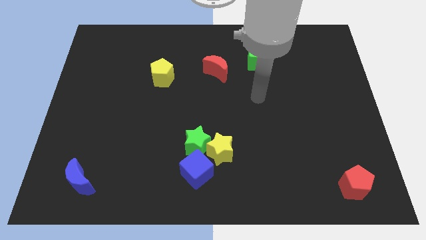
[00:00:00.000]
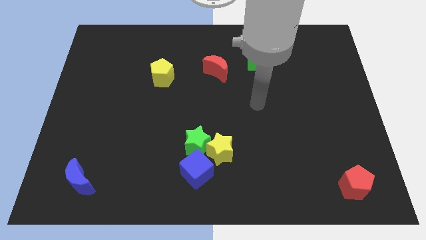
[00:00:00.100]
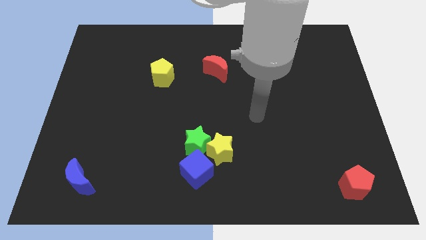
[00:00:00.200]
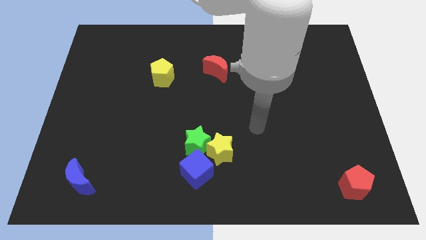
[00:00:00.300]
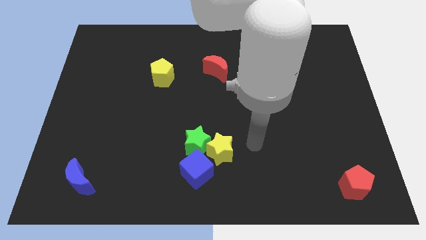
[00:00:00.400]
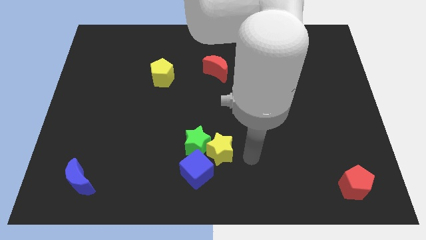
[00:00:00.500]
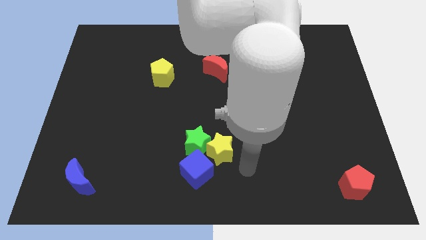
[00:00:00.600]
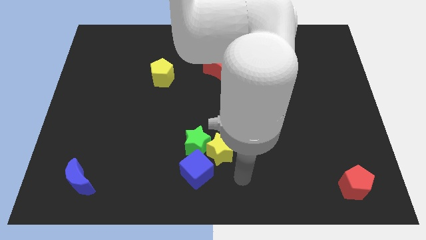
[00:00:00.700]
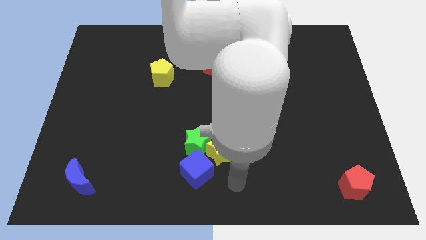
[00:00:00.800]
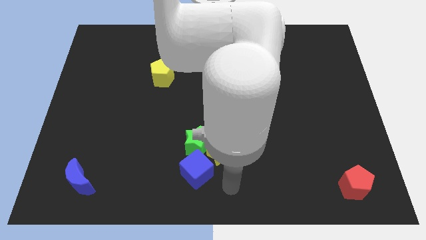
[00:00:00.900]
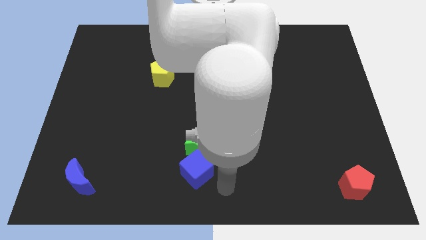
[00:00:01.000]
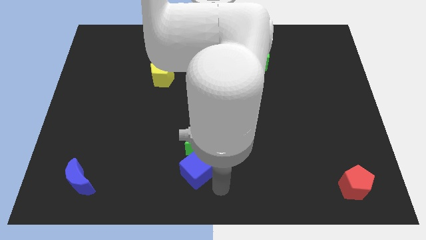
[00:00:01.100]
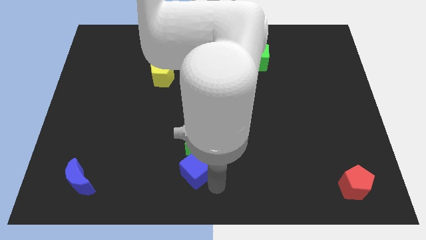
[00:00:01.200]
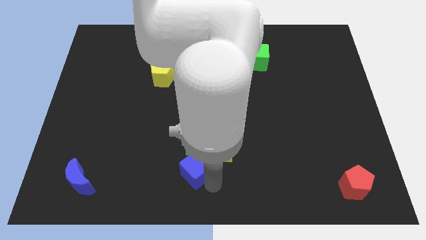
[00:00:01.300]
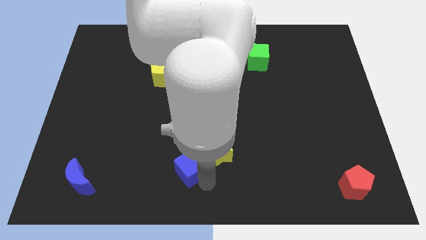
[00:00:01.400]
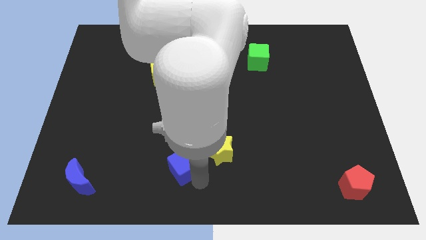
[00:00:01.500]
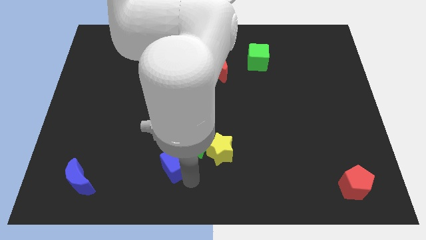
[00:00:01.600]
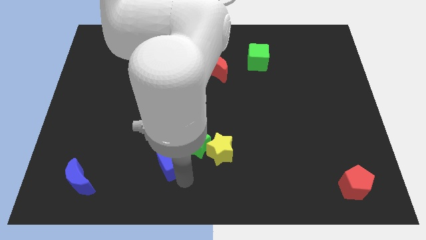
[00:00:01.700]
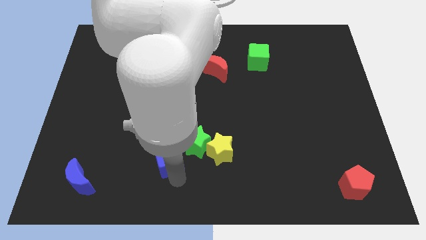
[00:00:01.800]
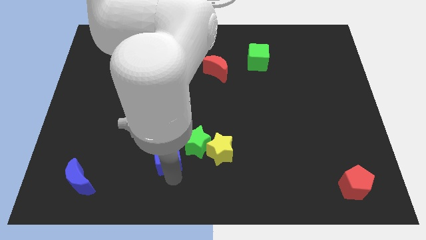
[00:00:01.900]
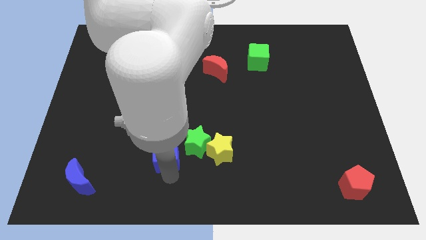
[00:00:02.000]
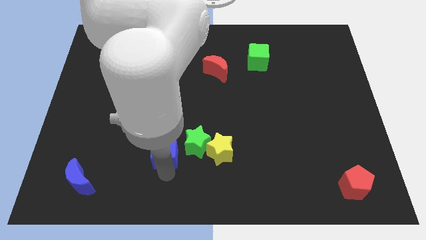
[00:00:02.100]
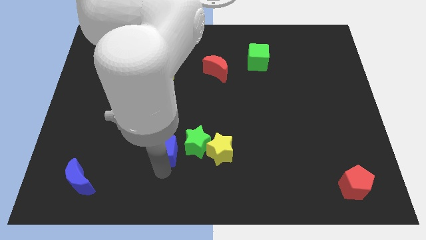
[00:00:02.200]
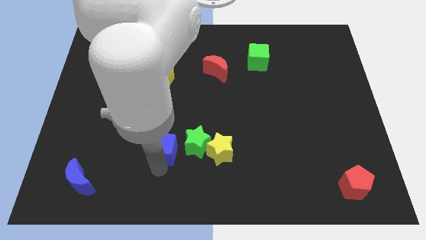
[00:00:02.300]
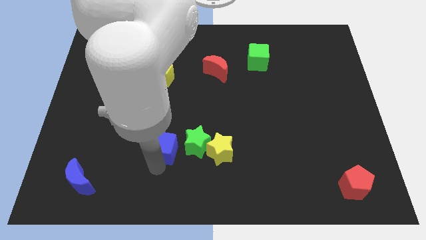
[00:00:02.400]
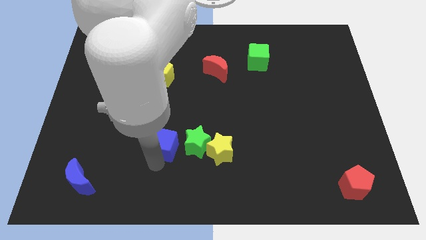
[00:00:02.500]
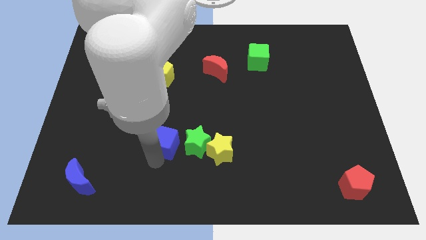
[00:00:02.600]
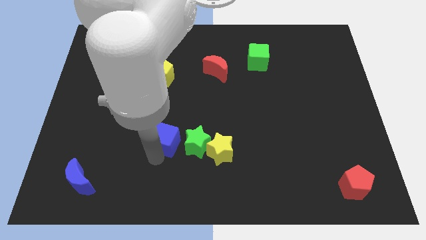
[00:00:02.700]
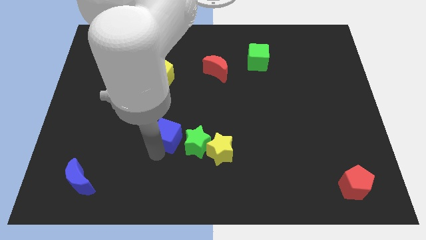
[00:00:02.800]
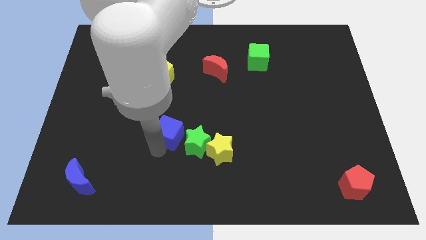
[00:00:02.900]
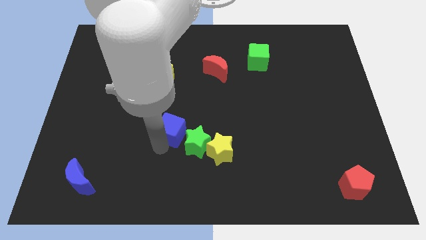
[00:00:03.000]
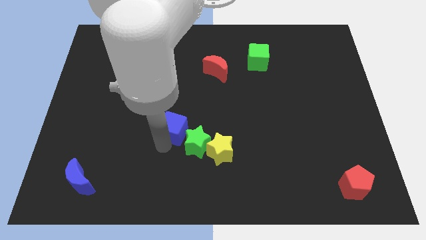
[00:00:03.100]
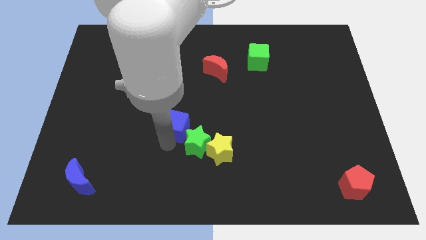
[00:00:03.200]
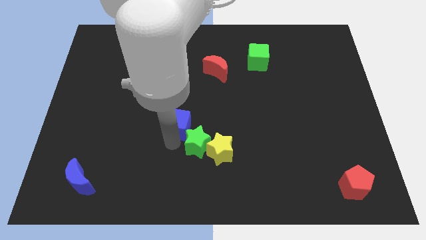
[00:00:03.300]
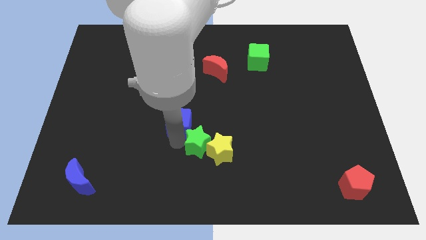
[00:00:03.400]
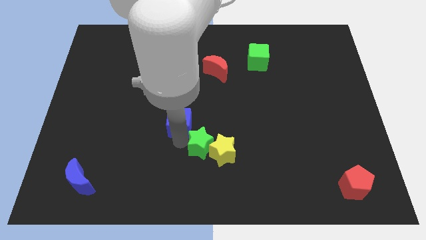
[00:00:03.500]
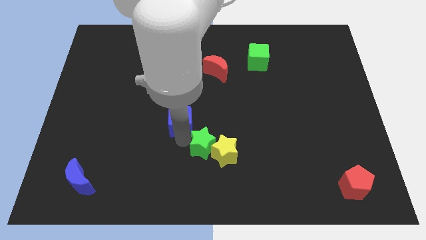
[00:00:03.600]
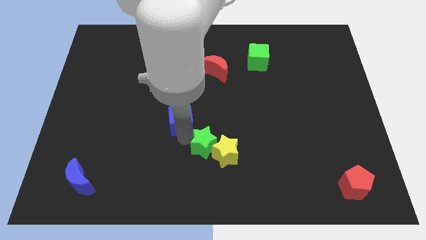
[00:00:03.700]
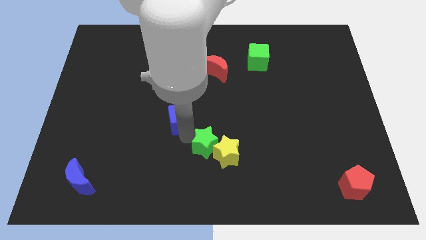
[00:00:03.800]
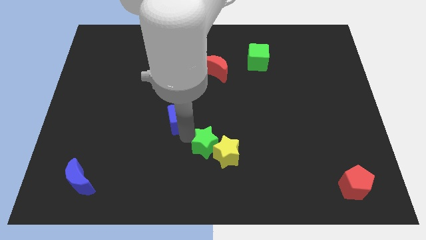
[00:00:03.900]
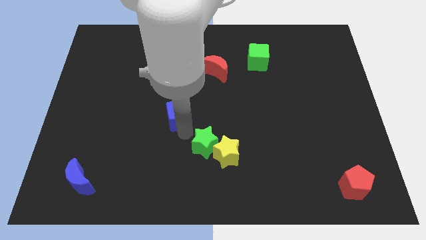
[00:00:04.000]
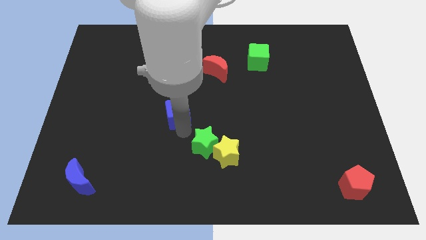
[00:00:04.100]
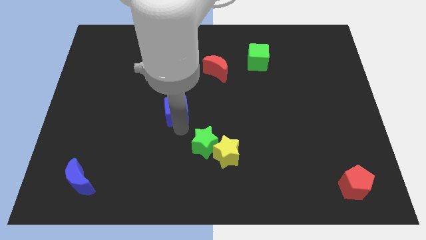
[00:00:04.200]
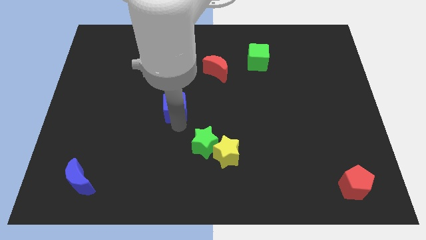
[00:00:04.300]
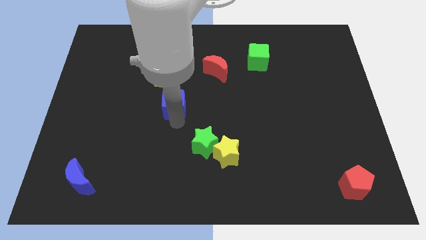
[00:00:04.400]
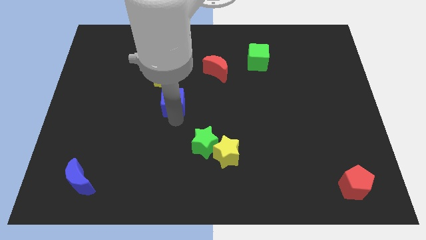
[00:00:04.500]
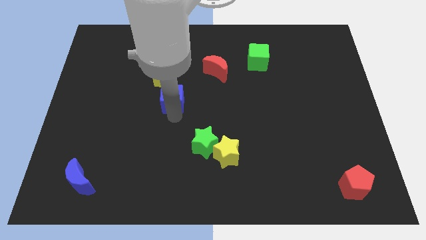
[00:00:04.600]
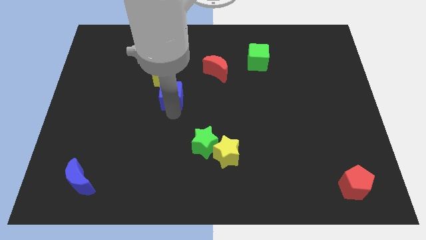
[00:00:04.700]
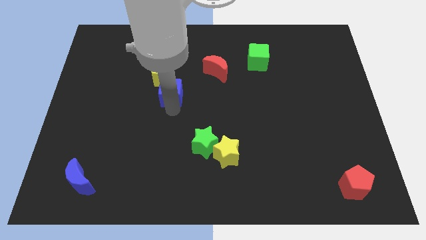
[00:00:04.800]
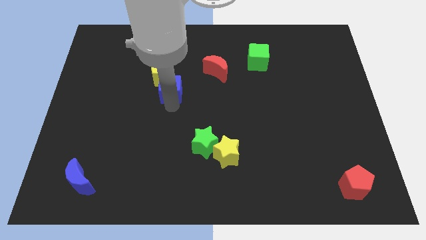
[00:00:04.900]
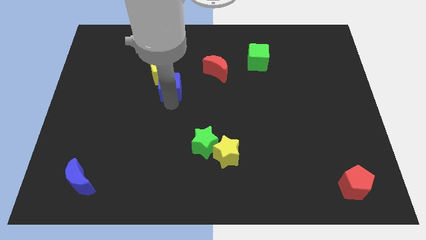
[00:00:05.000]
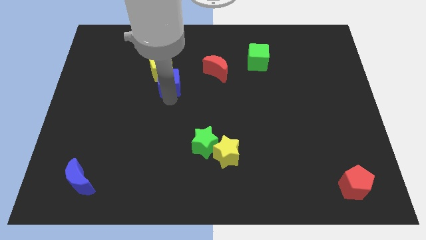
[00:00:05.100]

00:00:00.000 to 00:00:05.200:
slide the blue cube close to the yellow pentagon

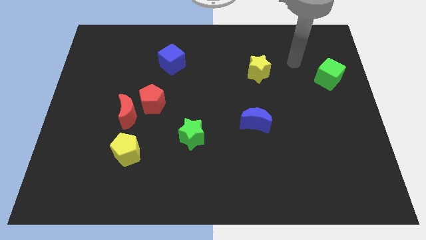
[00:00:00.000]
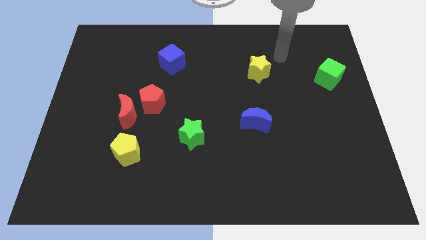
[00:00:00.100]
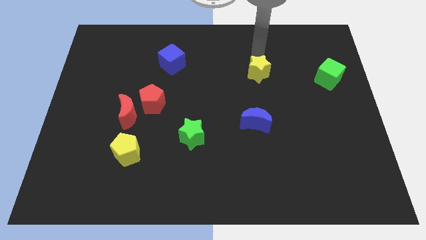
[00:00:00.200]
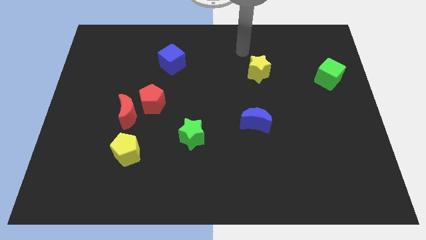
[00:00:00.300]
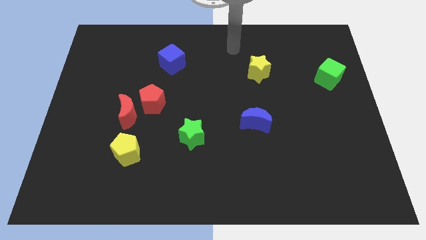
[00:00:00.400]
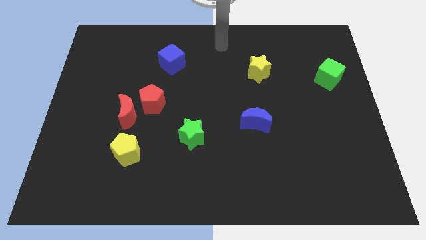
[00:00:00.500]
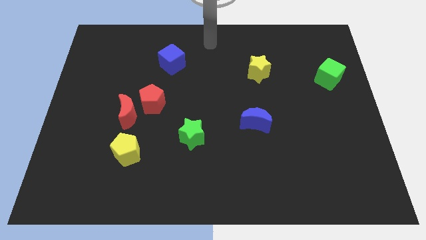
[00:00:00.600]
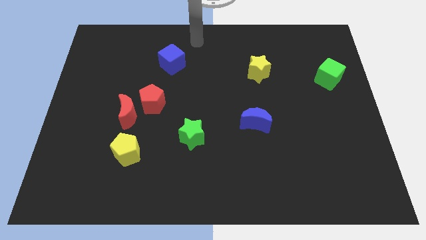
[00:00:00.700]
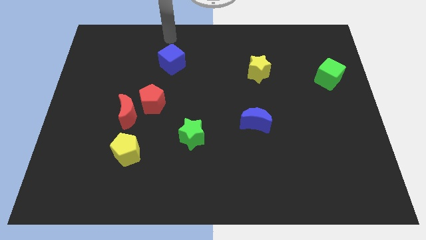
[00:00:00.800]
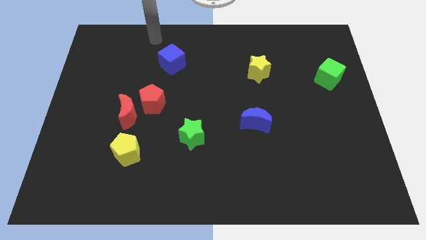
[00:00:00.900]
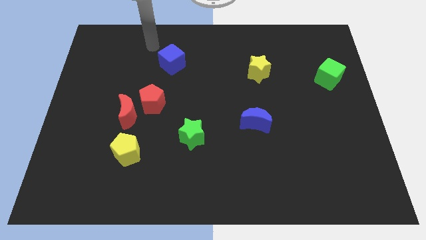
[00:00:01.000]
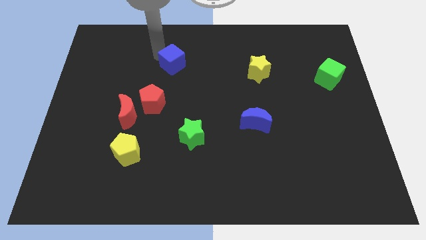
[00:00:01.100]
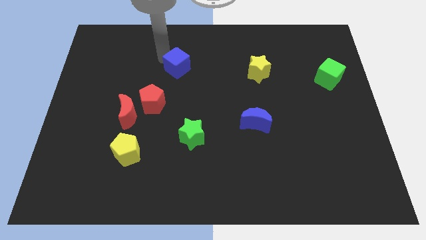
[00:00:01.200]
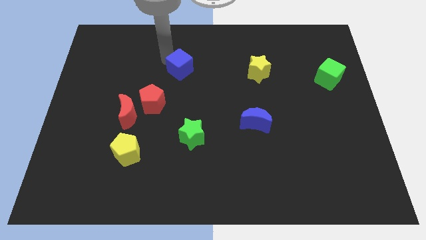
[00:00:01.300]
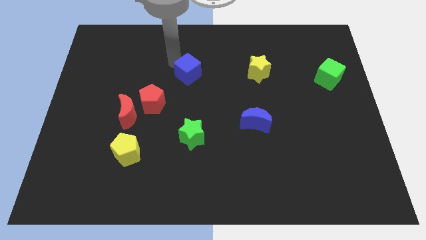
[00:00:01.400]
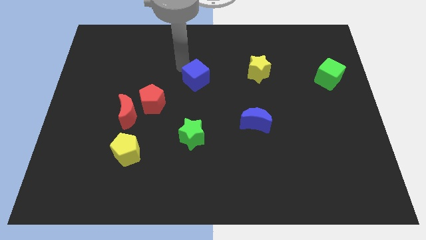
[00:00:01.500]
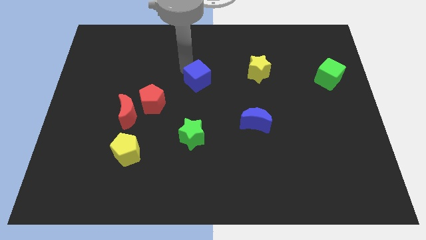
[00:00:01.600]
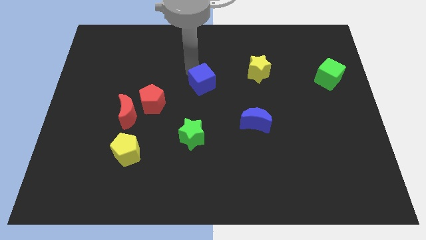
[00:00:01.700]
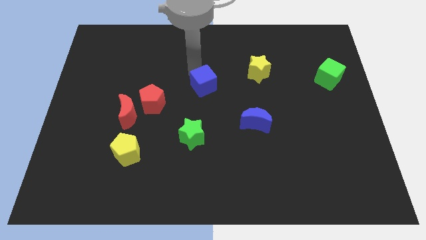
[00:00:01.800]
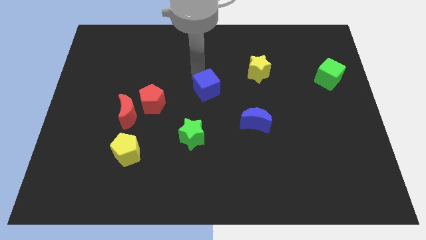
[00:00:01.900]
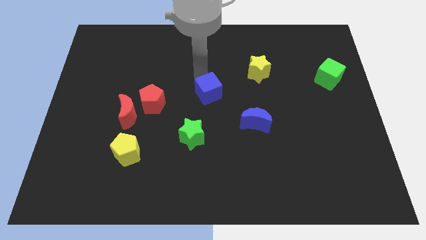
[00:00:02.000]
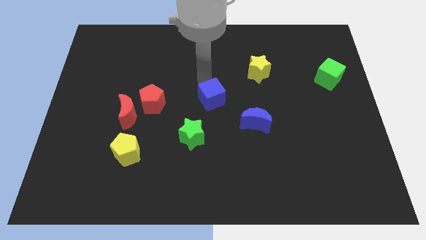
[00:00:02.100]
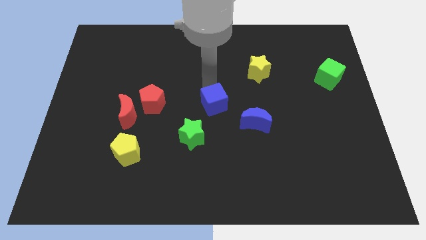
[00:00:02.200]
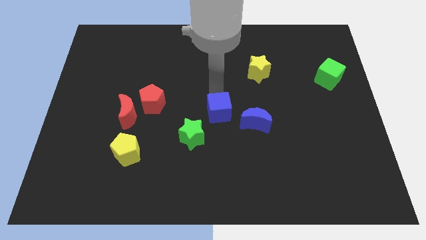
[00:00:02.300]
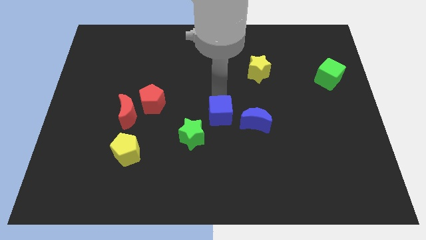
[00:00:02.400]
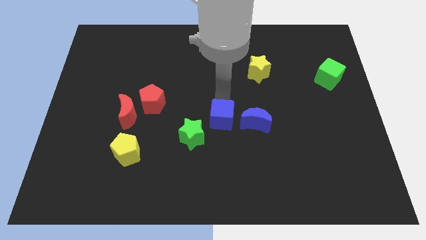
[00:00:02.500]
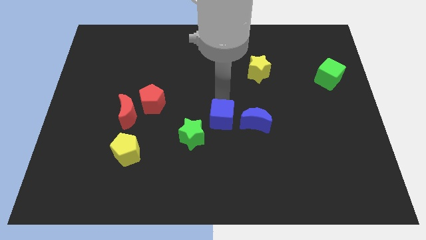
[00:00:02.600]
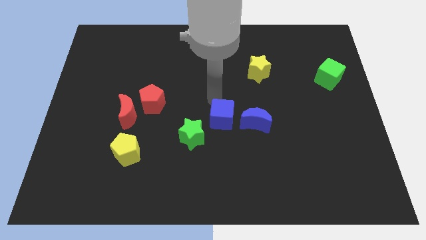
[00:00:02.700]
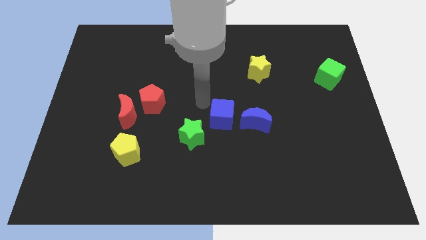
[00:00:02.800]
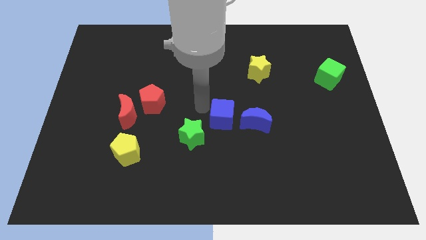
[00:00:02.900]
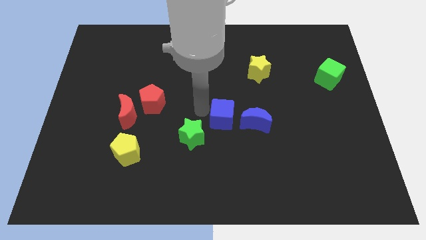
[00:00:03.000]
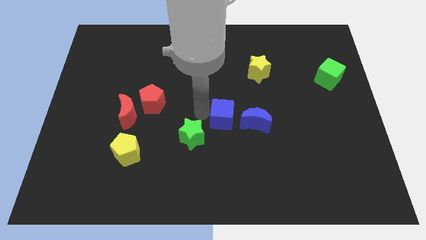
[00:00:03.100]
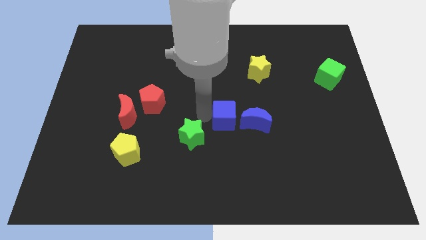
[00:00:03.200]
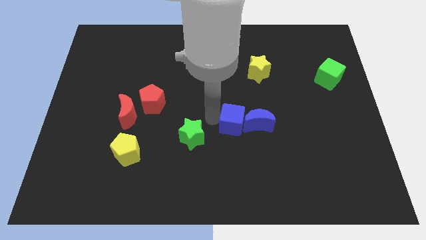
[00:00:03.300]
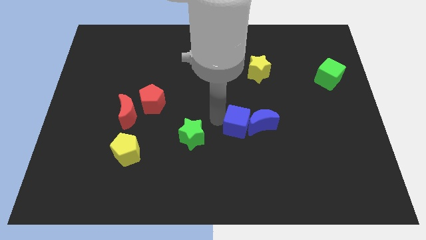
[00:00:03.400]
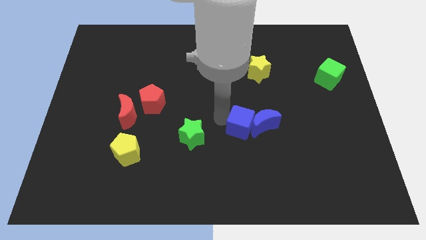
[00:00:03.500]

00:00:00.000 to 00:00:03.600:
put the blue cube to the blue moon
